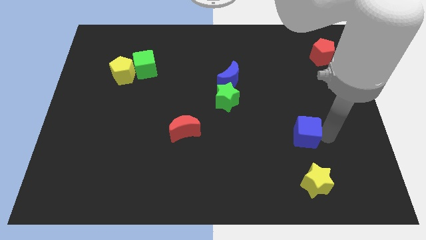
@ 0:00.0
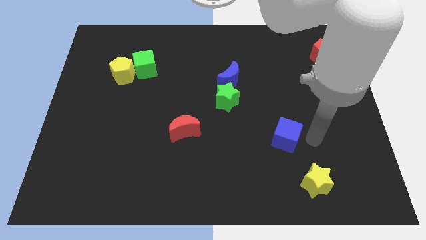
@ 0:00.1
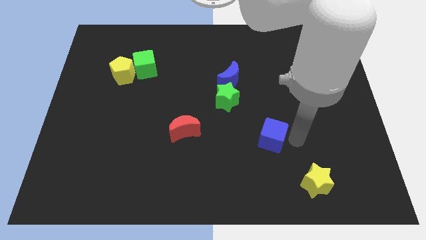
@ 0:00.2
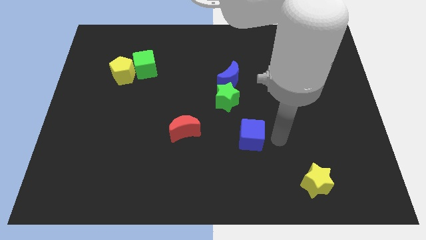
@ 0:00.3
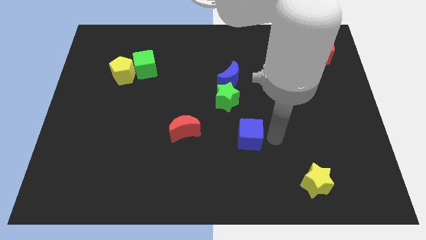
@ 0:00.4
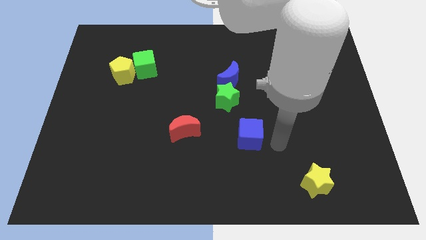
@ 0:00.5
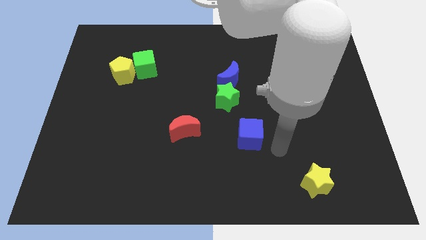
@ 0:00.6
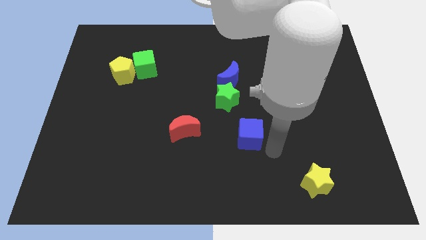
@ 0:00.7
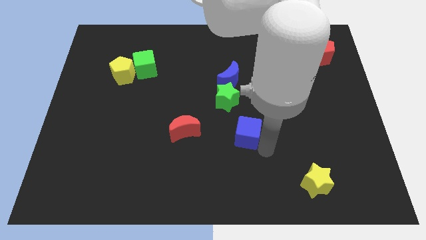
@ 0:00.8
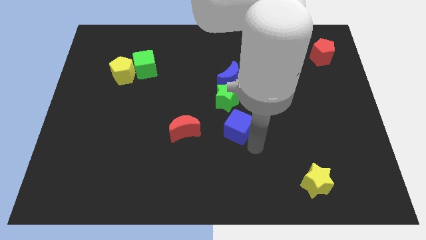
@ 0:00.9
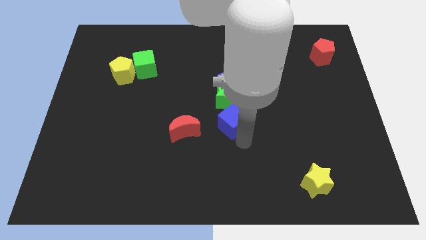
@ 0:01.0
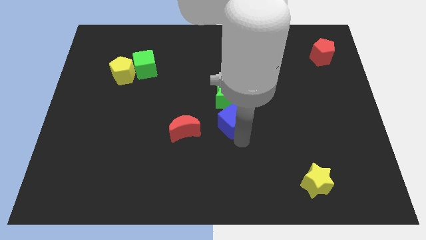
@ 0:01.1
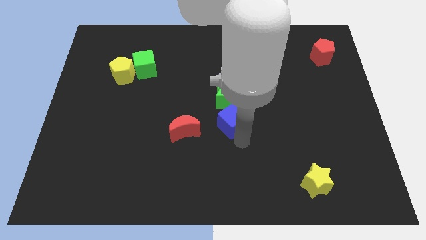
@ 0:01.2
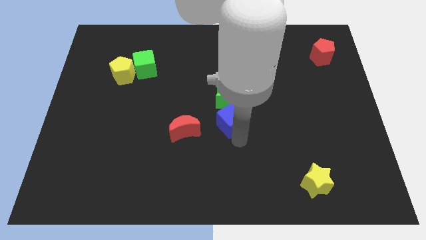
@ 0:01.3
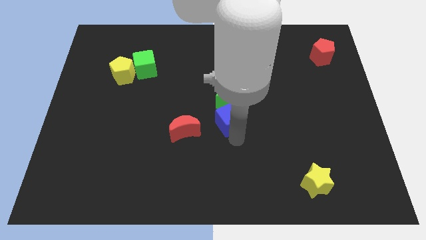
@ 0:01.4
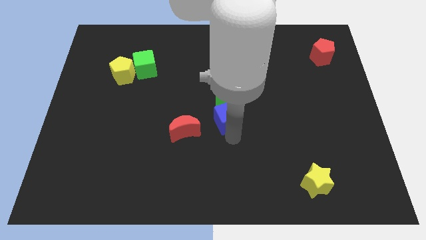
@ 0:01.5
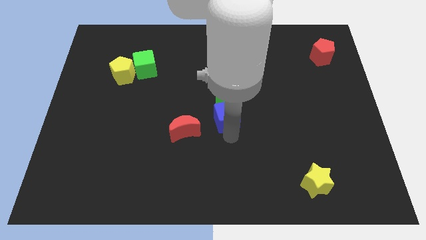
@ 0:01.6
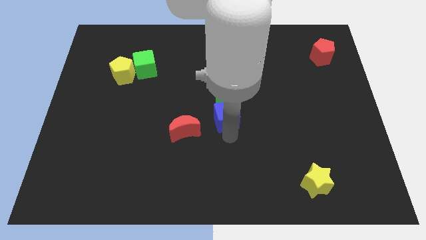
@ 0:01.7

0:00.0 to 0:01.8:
push the blue cube into the bottom side of the green star

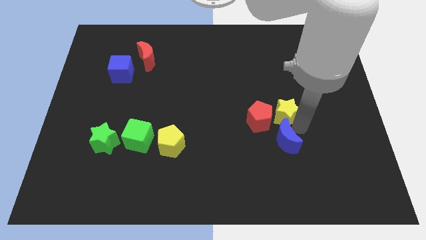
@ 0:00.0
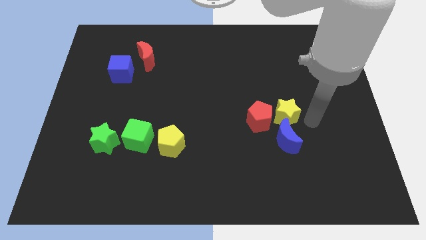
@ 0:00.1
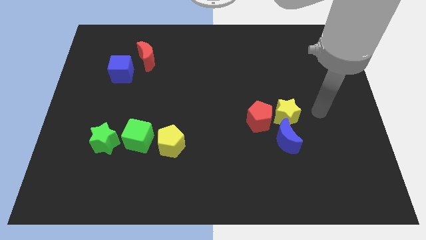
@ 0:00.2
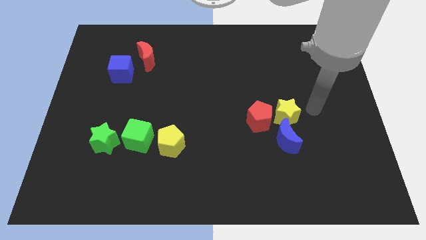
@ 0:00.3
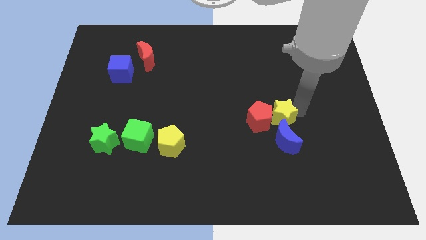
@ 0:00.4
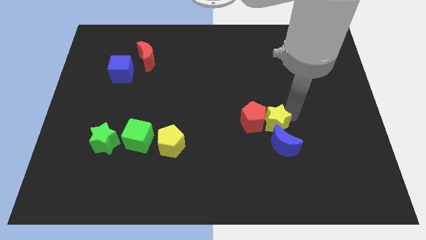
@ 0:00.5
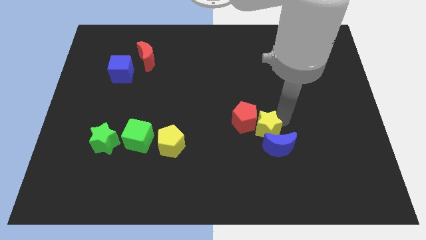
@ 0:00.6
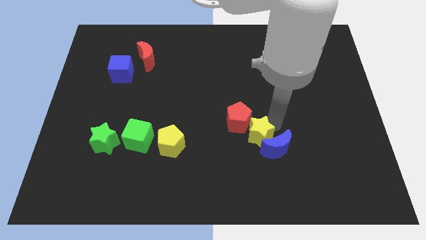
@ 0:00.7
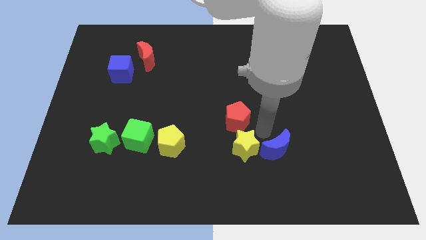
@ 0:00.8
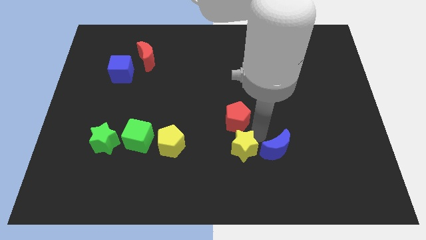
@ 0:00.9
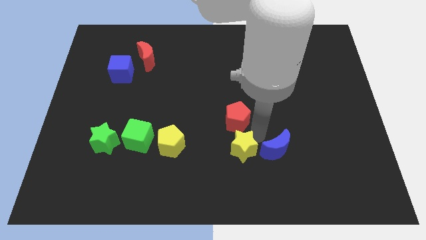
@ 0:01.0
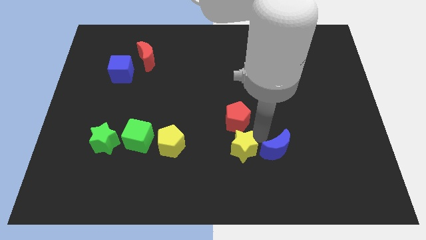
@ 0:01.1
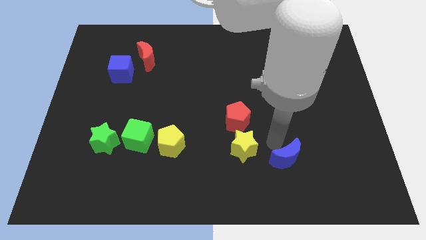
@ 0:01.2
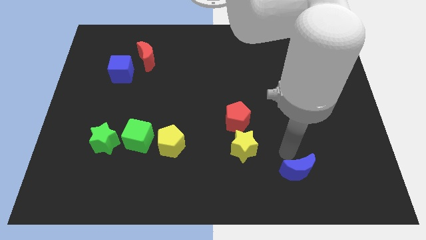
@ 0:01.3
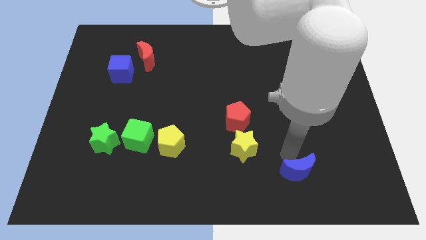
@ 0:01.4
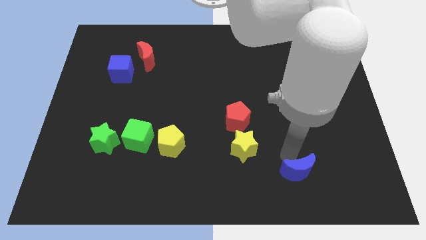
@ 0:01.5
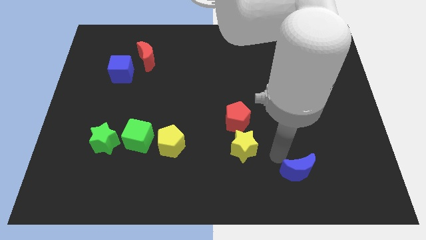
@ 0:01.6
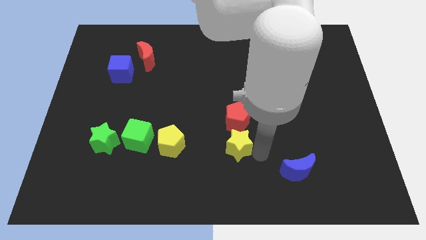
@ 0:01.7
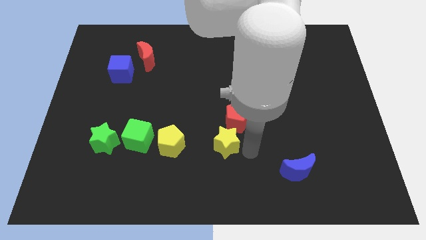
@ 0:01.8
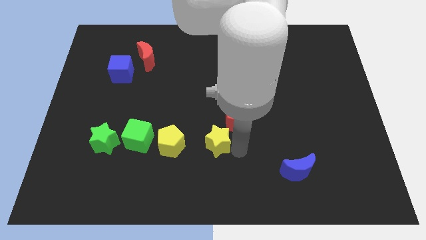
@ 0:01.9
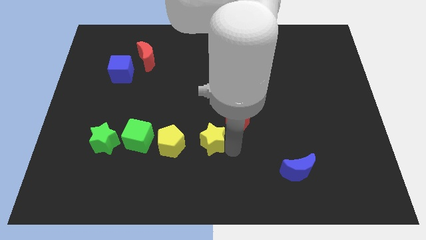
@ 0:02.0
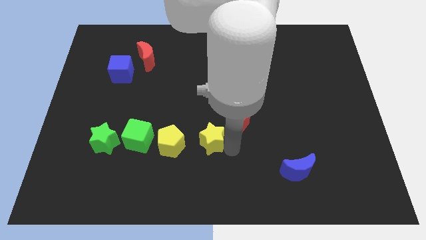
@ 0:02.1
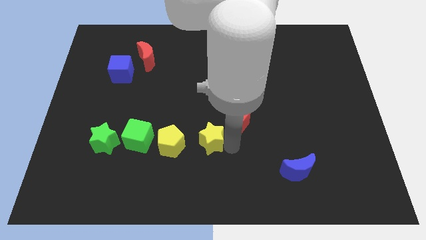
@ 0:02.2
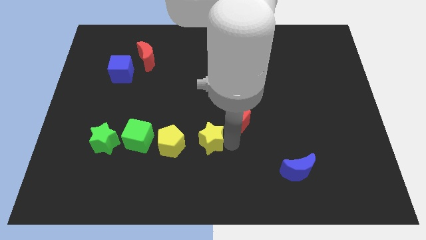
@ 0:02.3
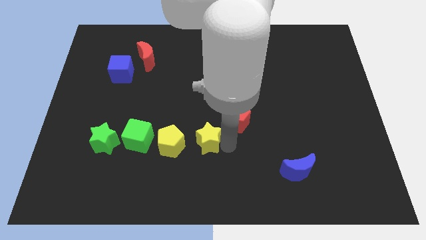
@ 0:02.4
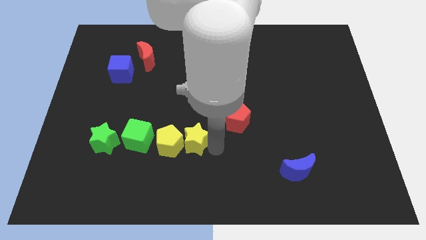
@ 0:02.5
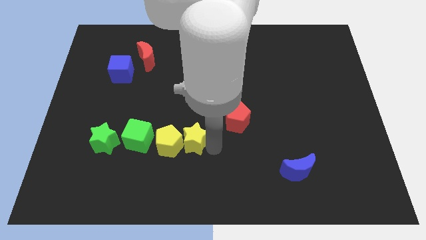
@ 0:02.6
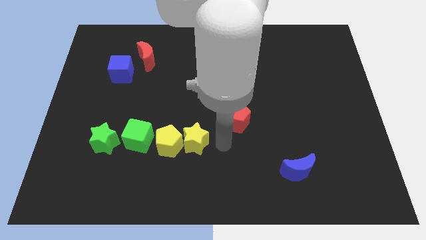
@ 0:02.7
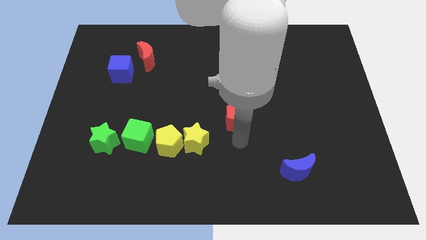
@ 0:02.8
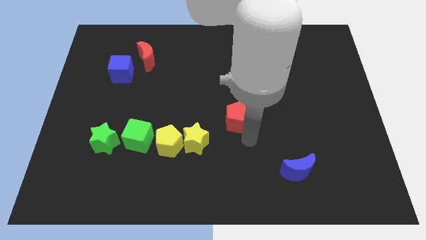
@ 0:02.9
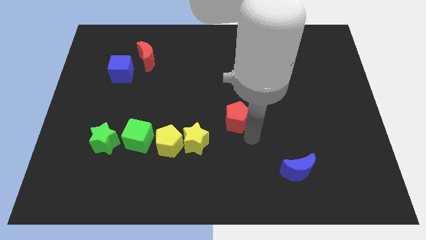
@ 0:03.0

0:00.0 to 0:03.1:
place the yellow star beside the yellow pentagon

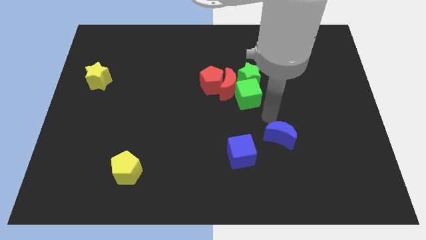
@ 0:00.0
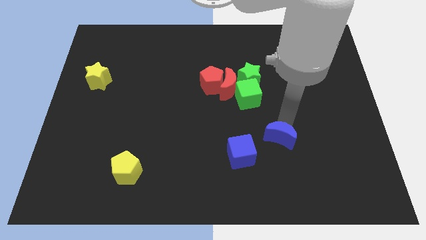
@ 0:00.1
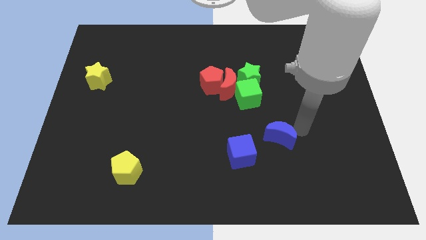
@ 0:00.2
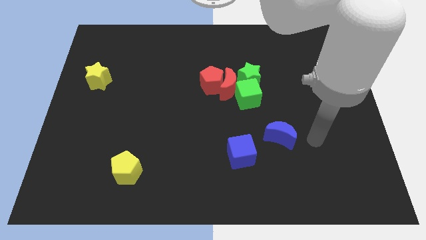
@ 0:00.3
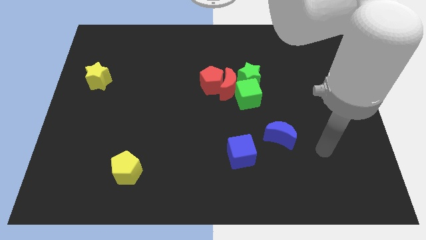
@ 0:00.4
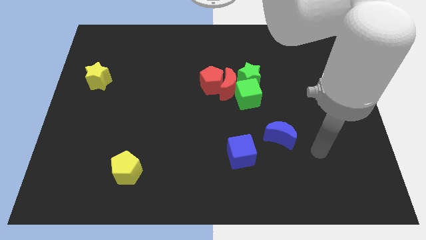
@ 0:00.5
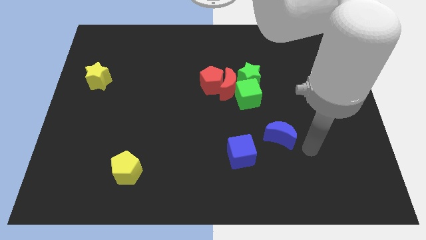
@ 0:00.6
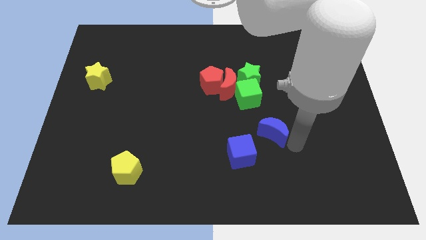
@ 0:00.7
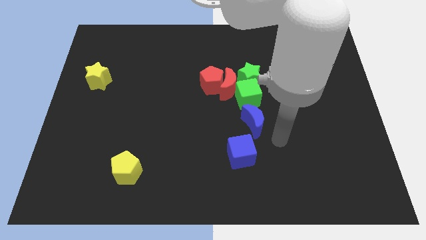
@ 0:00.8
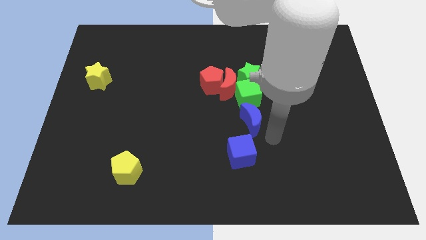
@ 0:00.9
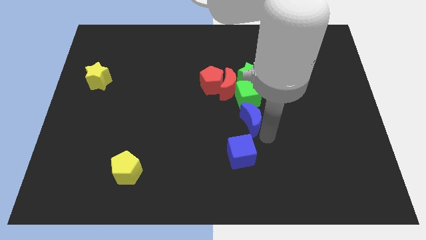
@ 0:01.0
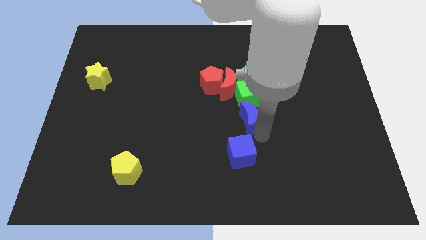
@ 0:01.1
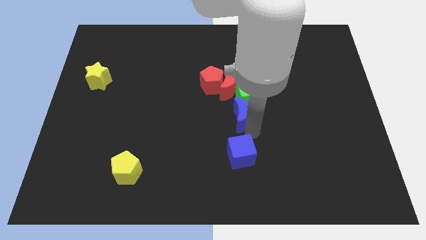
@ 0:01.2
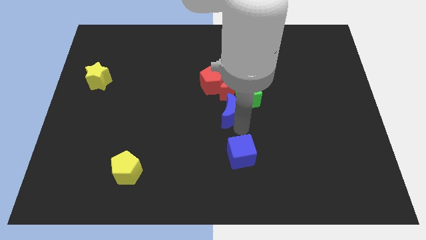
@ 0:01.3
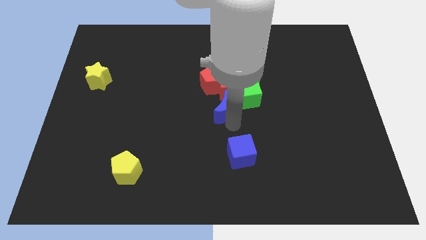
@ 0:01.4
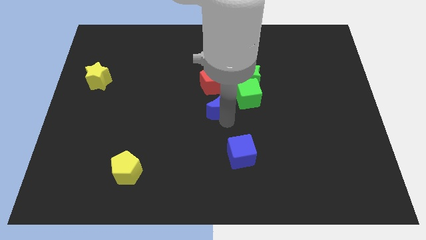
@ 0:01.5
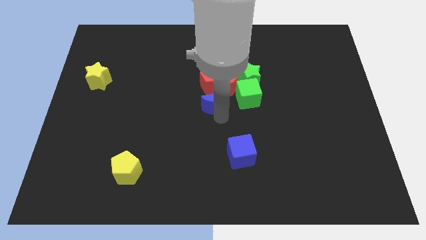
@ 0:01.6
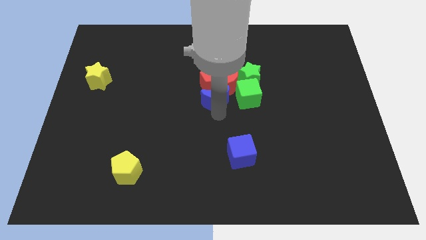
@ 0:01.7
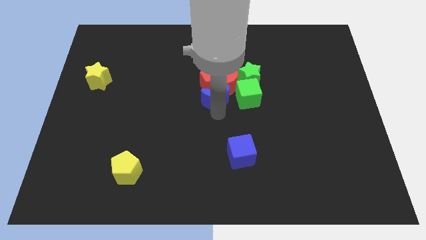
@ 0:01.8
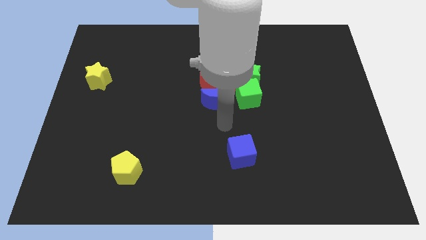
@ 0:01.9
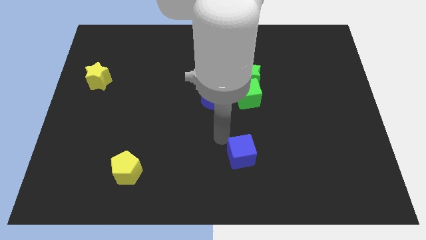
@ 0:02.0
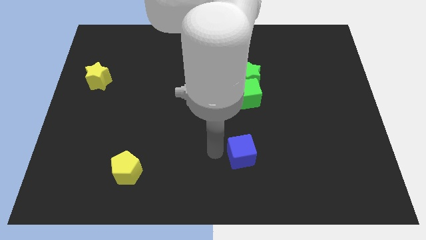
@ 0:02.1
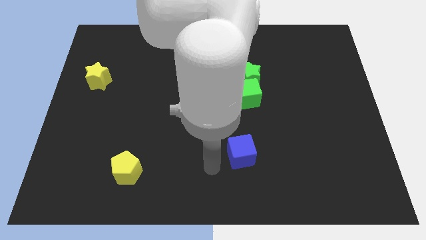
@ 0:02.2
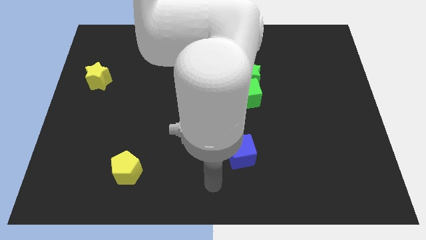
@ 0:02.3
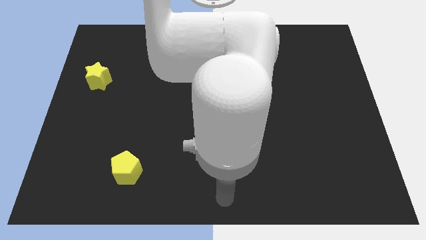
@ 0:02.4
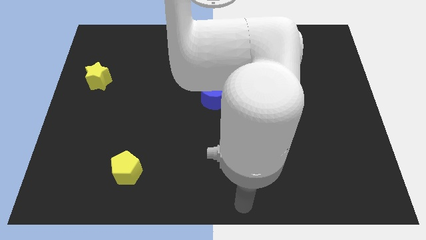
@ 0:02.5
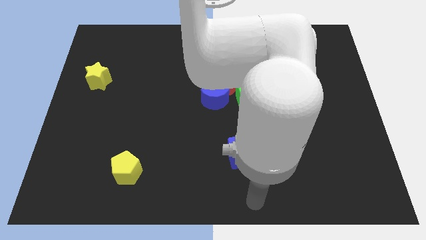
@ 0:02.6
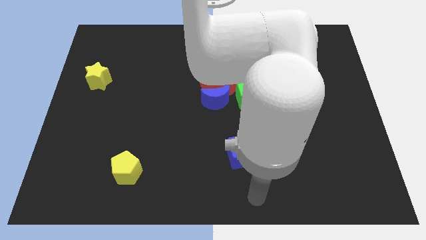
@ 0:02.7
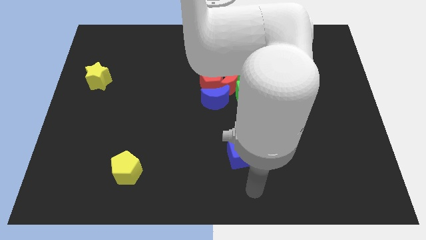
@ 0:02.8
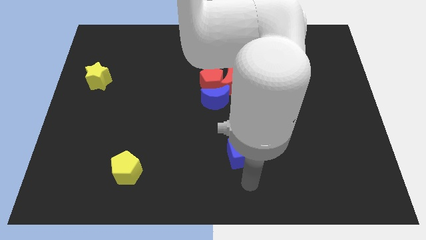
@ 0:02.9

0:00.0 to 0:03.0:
place blue crescent at the bottom of red pentagon

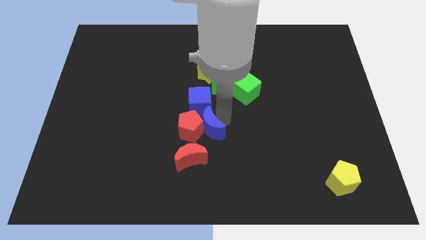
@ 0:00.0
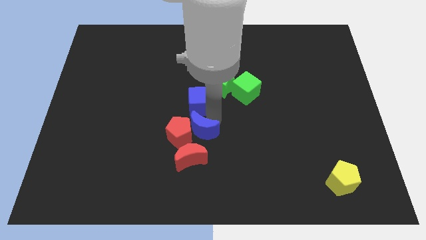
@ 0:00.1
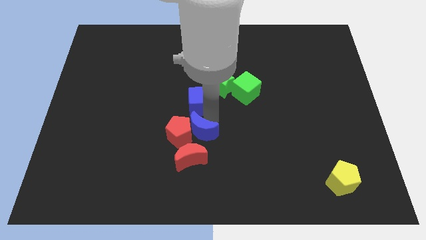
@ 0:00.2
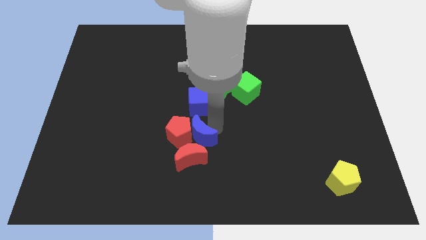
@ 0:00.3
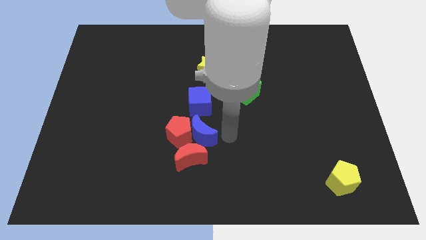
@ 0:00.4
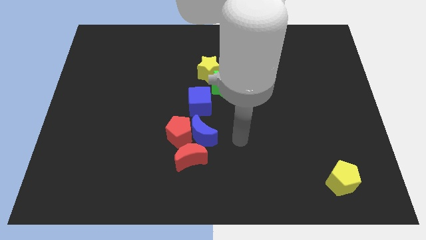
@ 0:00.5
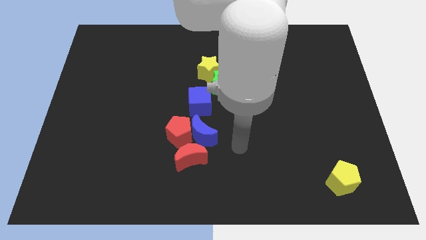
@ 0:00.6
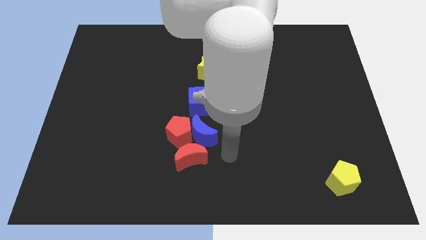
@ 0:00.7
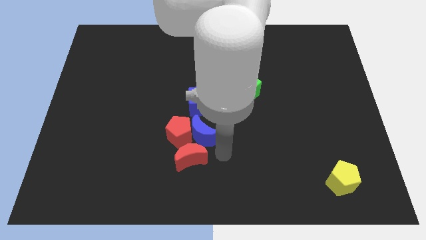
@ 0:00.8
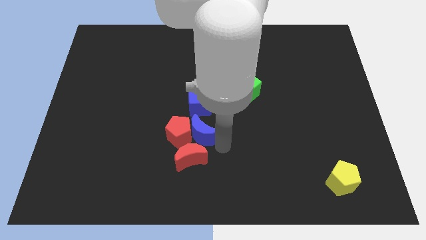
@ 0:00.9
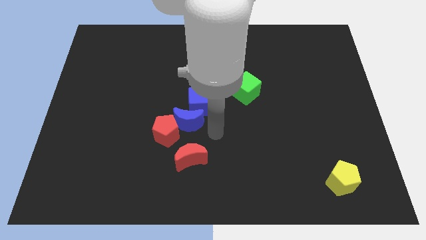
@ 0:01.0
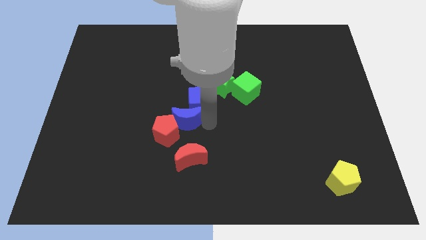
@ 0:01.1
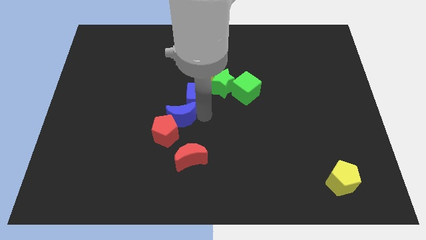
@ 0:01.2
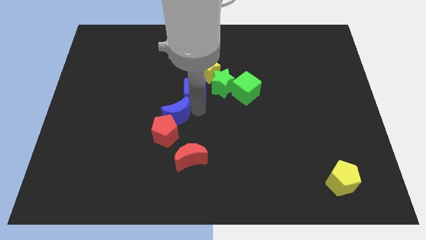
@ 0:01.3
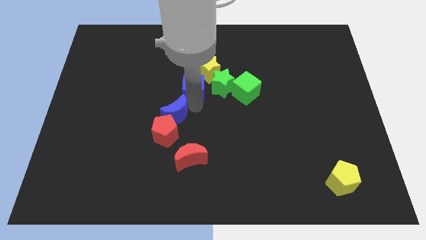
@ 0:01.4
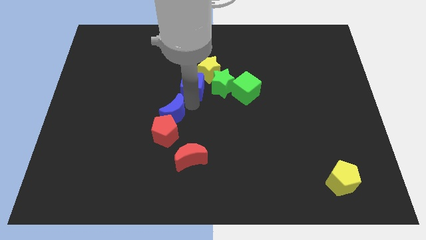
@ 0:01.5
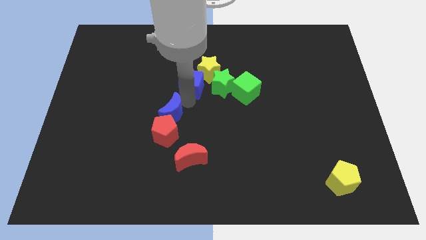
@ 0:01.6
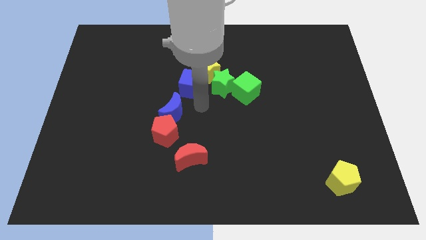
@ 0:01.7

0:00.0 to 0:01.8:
separate the blue moon and red pentagon towards left
